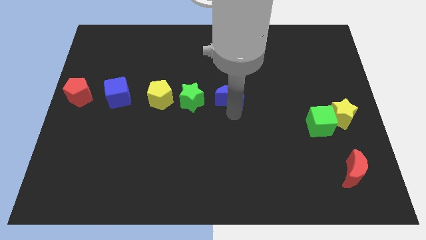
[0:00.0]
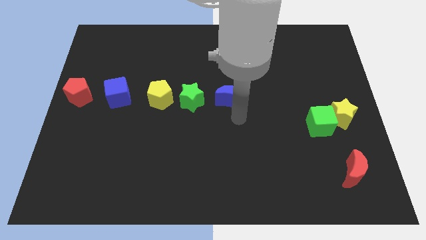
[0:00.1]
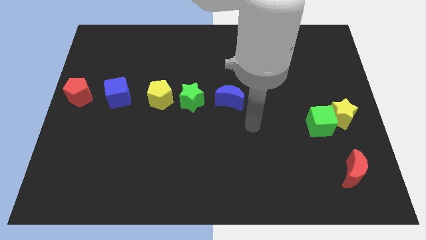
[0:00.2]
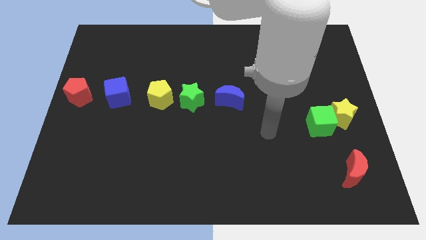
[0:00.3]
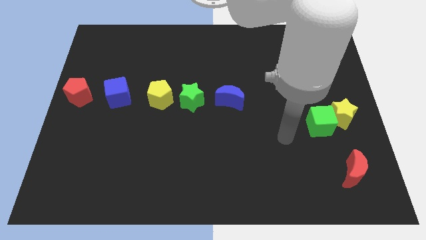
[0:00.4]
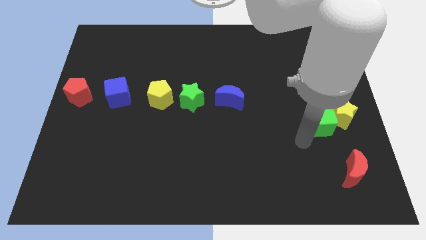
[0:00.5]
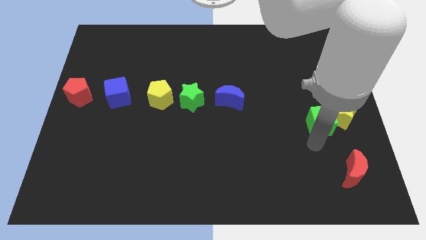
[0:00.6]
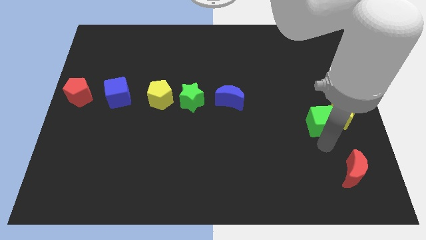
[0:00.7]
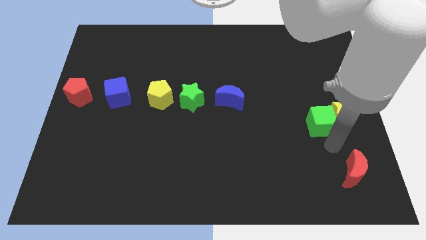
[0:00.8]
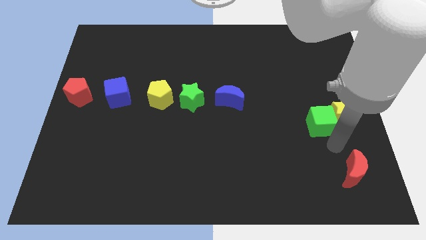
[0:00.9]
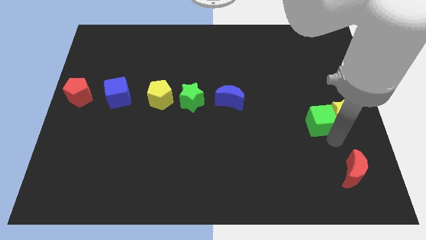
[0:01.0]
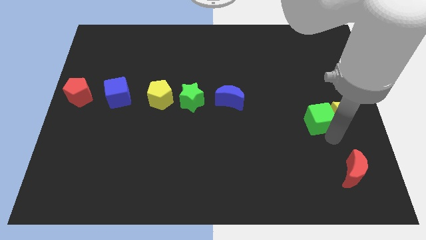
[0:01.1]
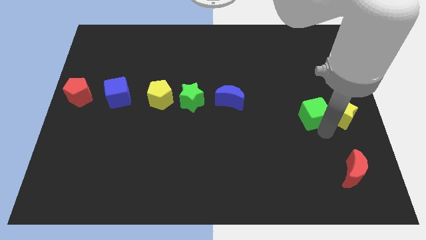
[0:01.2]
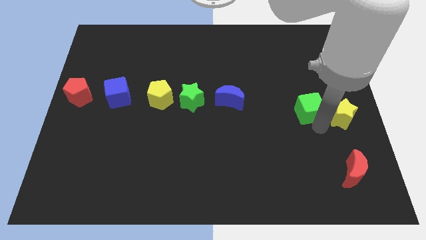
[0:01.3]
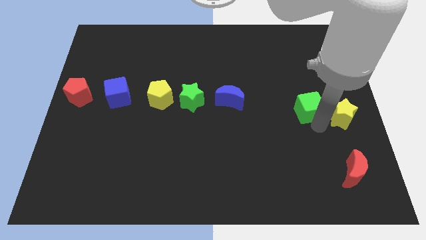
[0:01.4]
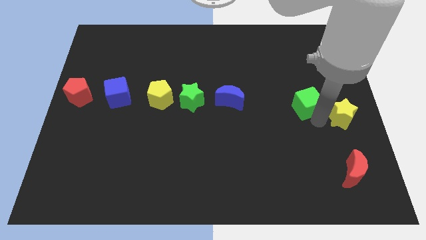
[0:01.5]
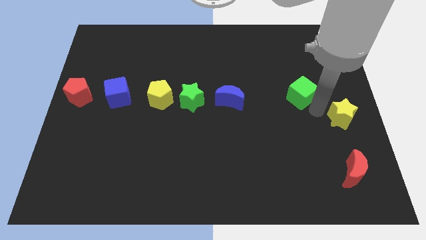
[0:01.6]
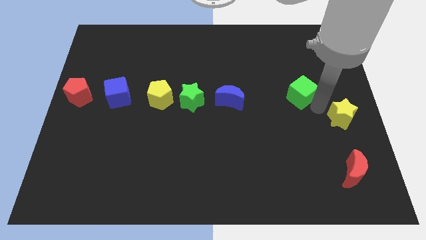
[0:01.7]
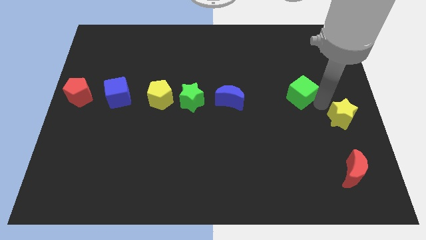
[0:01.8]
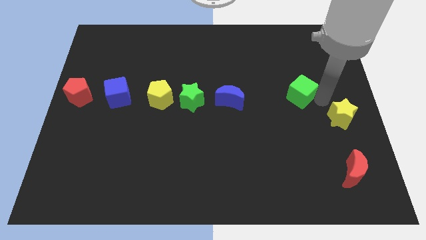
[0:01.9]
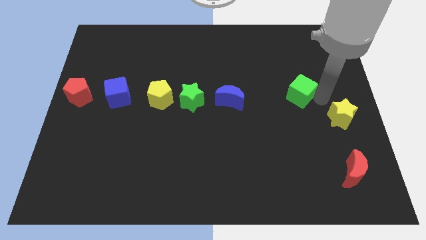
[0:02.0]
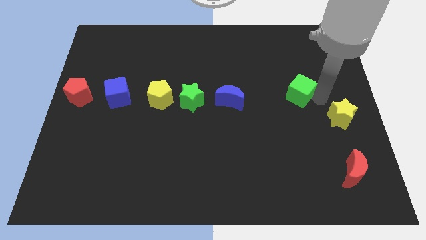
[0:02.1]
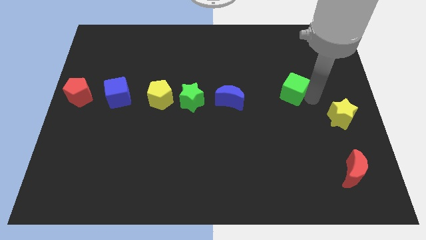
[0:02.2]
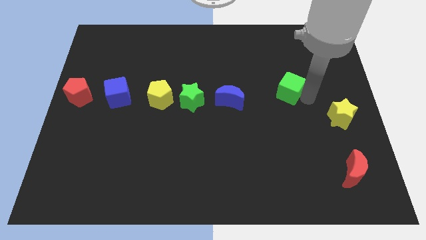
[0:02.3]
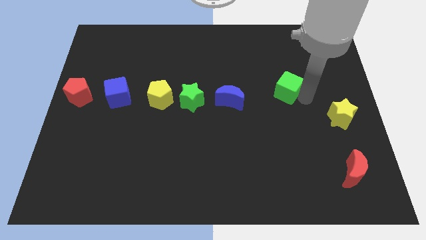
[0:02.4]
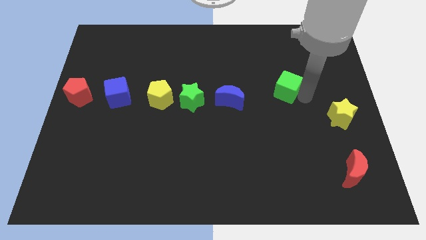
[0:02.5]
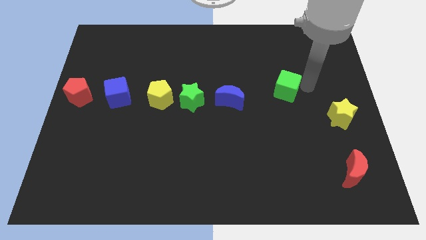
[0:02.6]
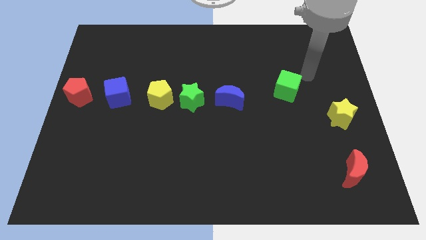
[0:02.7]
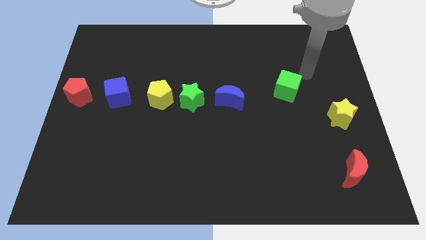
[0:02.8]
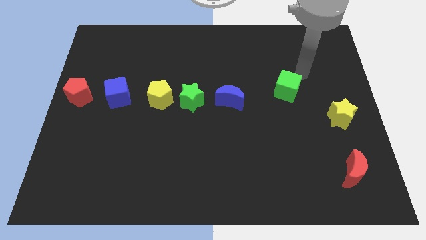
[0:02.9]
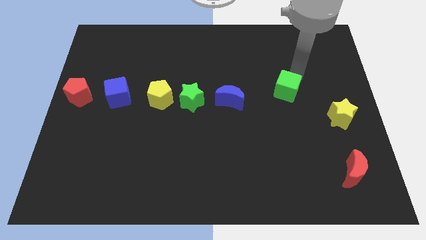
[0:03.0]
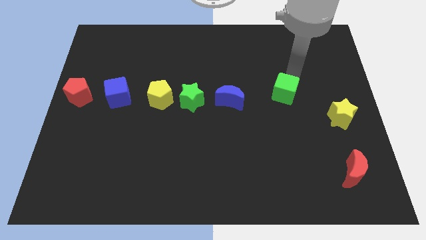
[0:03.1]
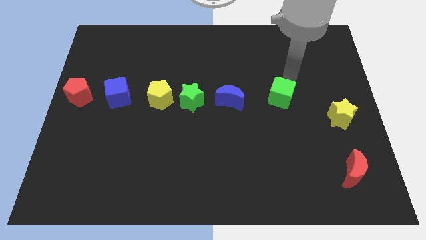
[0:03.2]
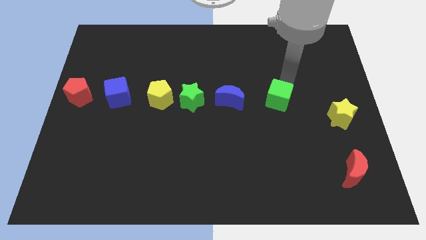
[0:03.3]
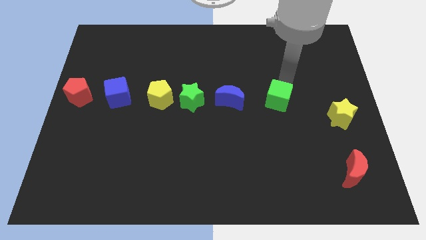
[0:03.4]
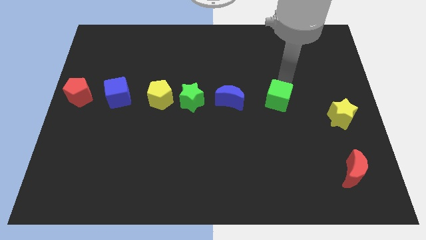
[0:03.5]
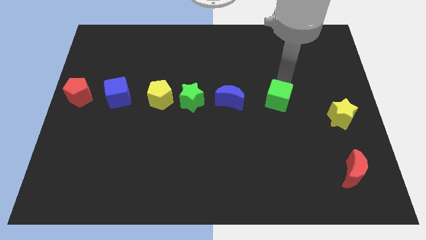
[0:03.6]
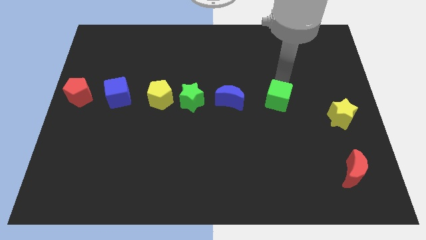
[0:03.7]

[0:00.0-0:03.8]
place green cube to the right of blue moon

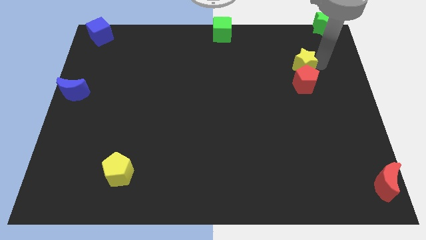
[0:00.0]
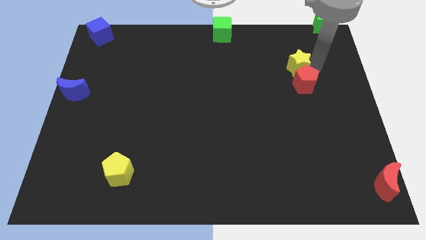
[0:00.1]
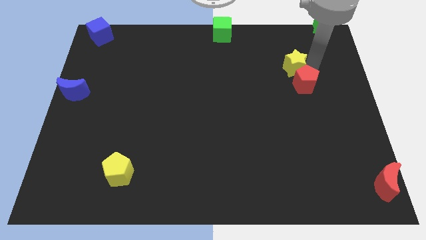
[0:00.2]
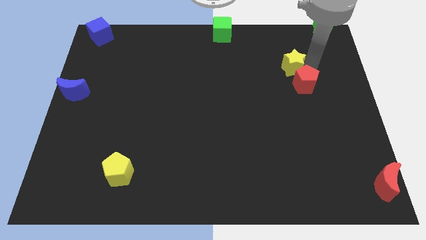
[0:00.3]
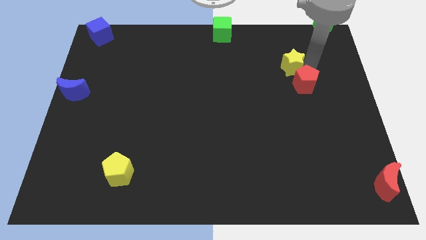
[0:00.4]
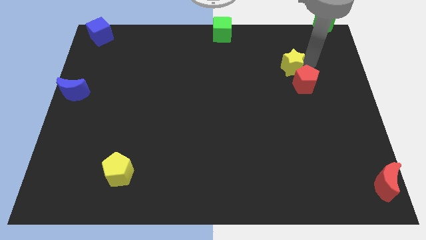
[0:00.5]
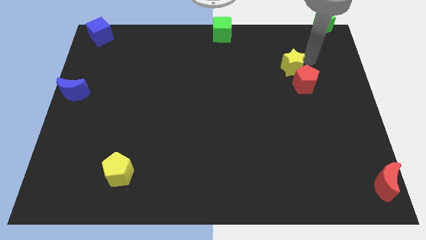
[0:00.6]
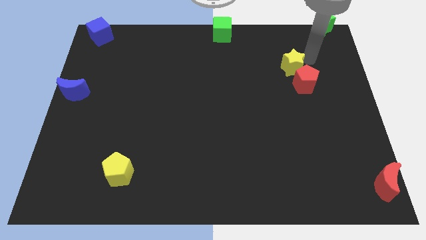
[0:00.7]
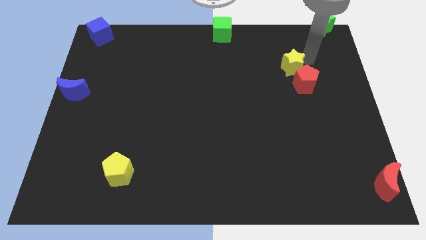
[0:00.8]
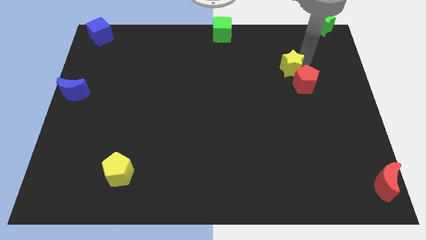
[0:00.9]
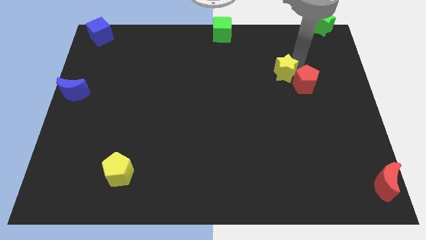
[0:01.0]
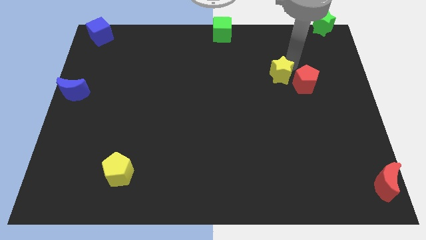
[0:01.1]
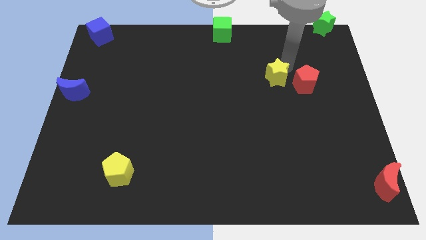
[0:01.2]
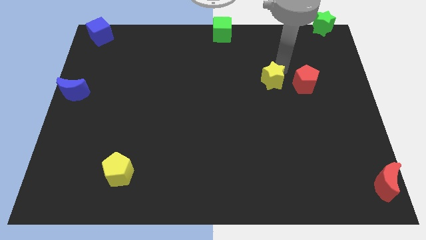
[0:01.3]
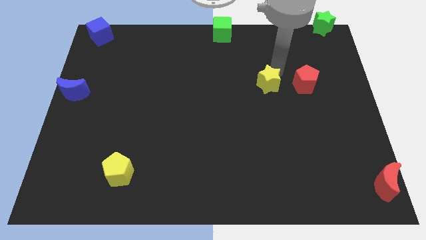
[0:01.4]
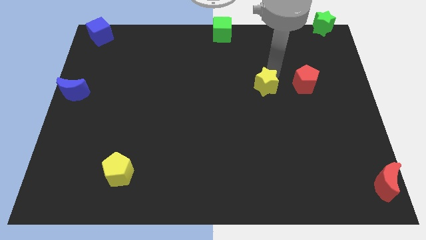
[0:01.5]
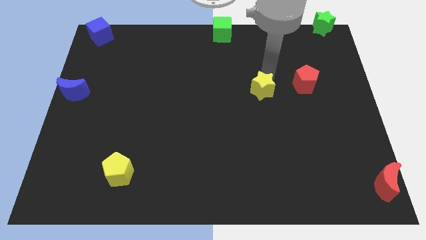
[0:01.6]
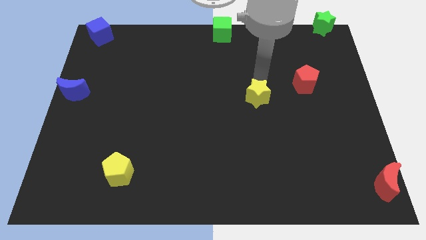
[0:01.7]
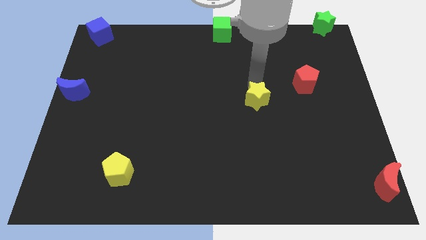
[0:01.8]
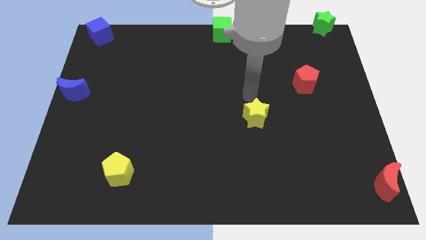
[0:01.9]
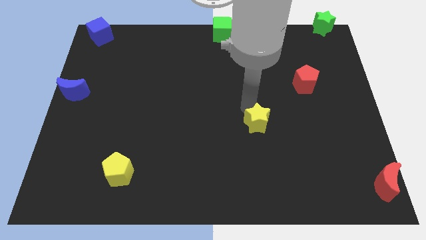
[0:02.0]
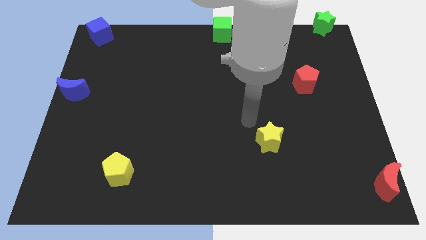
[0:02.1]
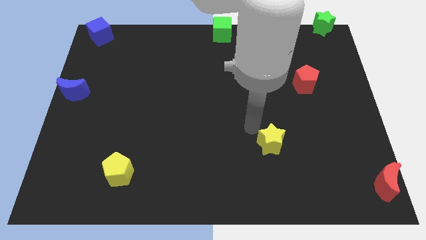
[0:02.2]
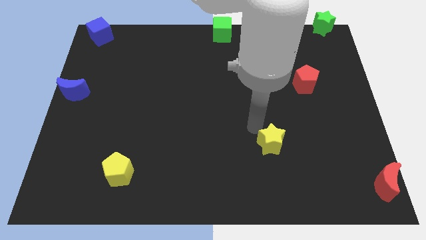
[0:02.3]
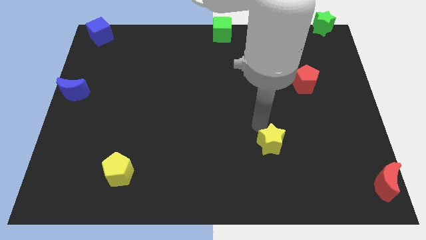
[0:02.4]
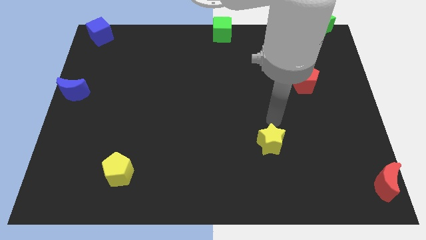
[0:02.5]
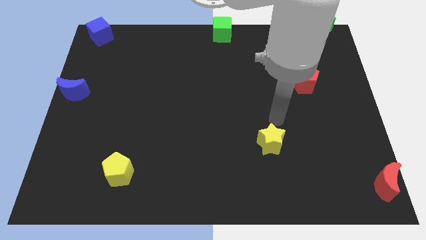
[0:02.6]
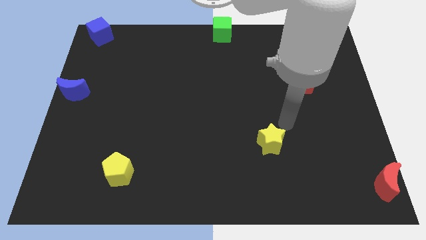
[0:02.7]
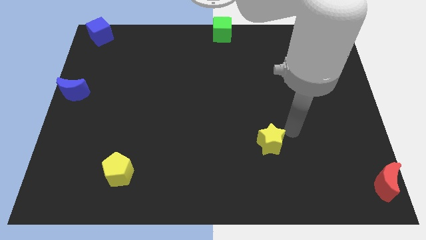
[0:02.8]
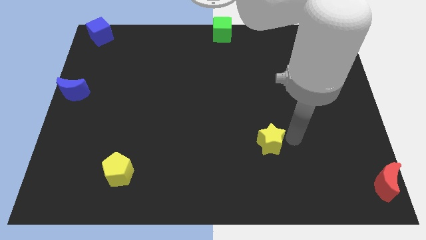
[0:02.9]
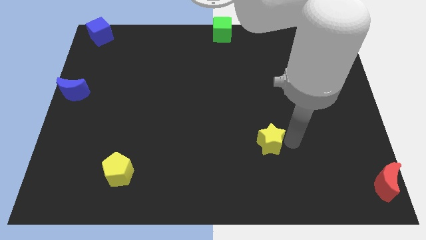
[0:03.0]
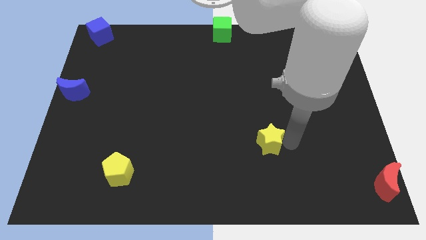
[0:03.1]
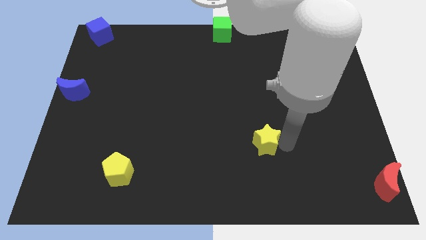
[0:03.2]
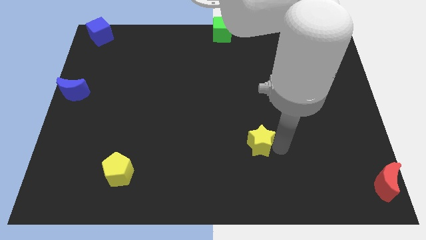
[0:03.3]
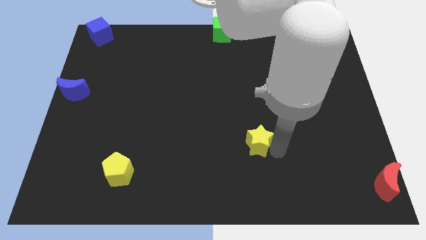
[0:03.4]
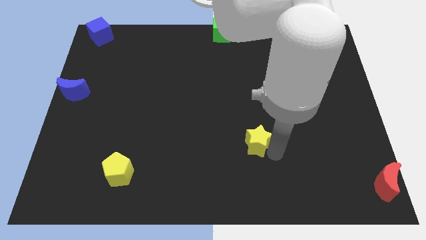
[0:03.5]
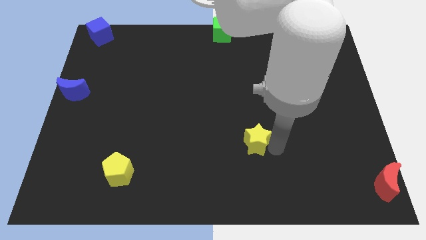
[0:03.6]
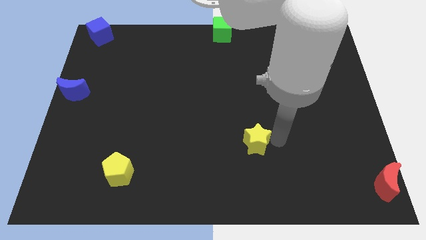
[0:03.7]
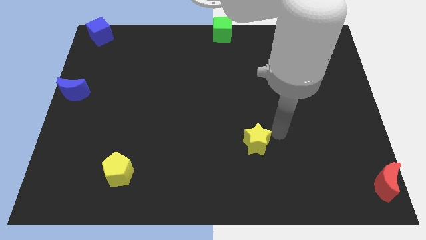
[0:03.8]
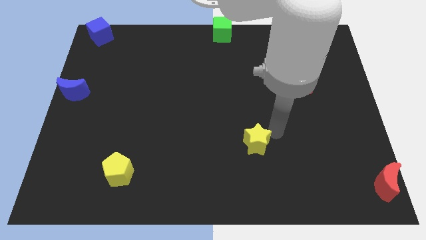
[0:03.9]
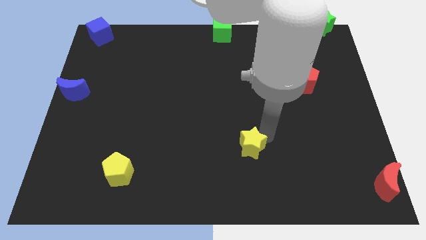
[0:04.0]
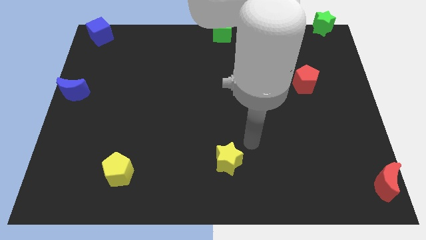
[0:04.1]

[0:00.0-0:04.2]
place yellow star below green cube

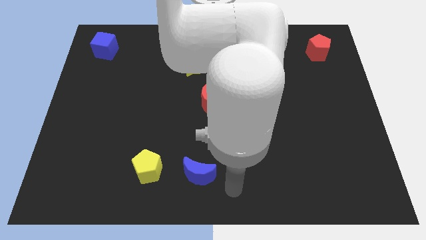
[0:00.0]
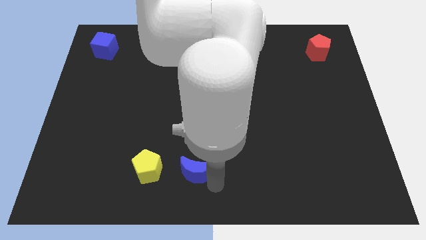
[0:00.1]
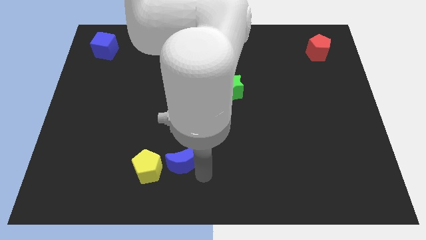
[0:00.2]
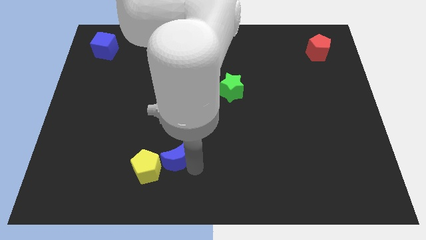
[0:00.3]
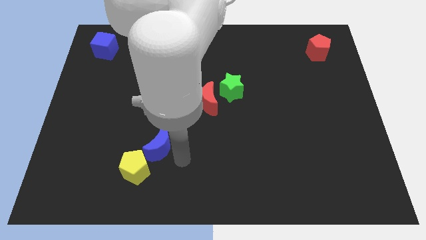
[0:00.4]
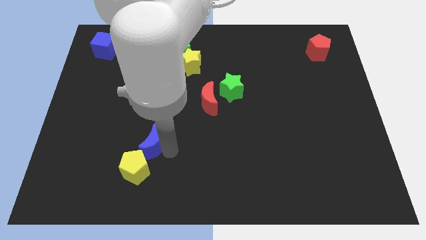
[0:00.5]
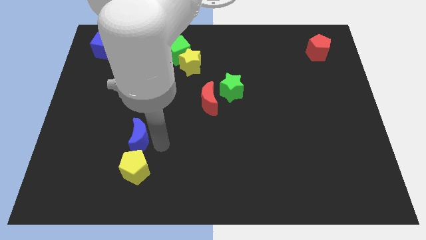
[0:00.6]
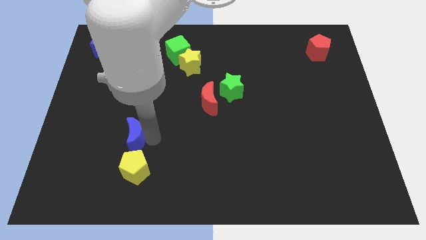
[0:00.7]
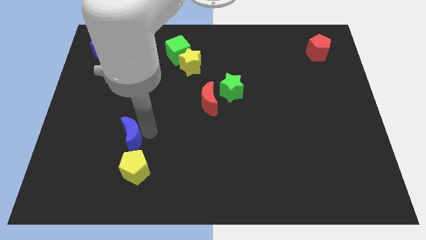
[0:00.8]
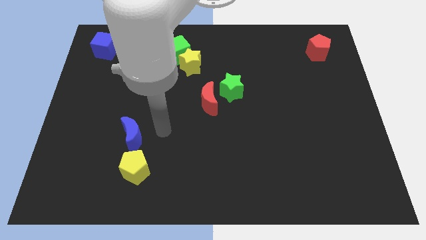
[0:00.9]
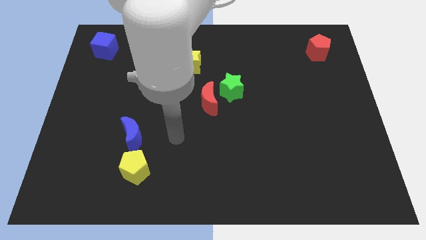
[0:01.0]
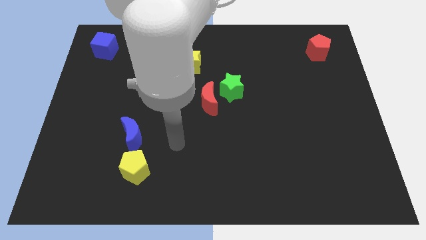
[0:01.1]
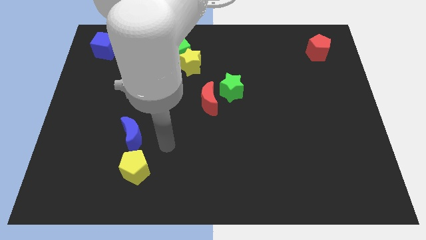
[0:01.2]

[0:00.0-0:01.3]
push the blue moon above the yellow pentagon
